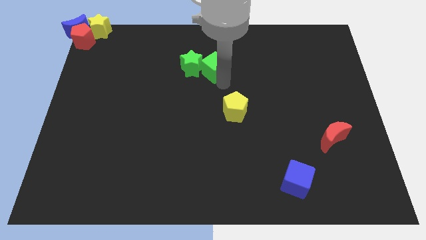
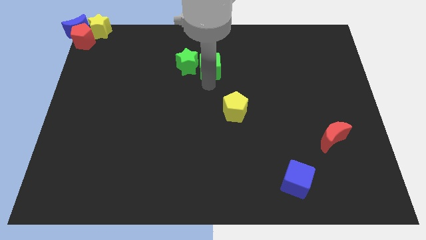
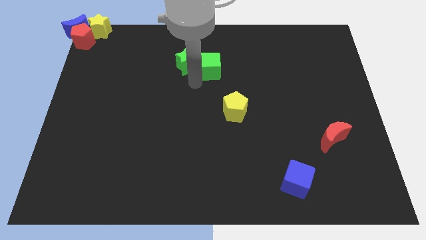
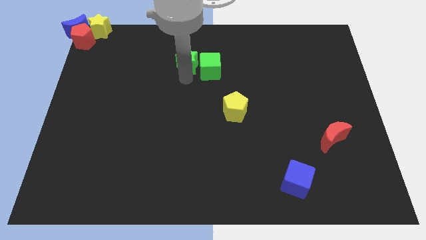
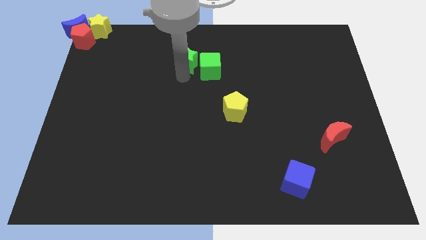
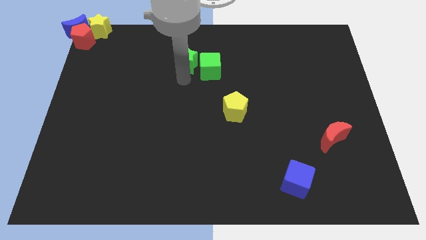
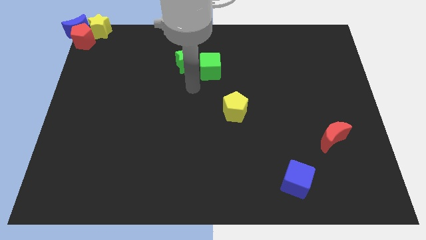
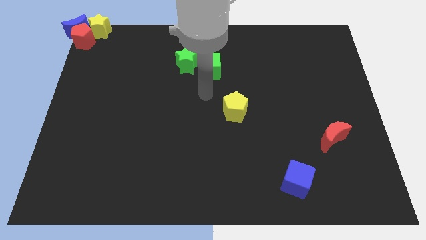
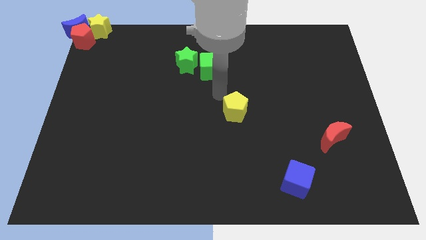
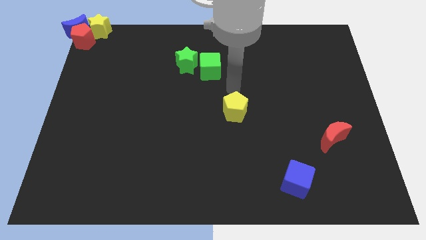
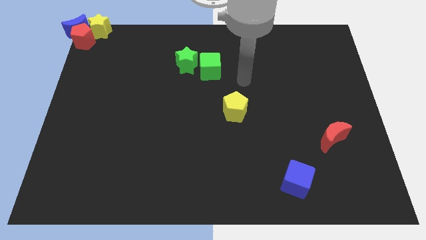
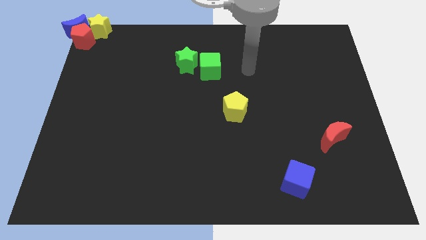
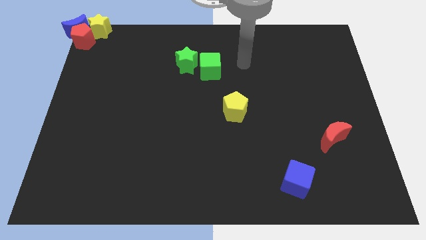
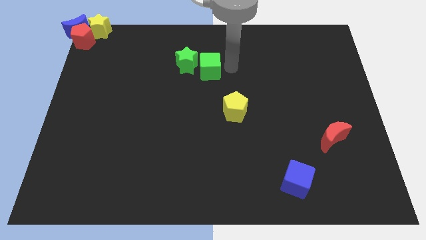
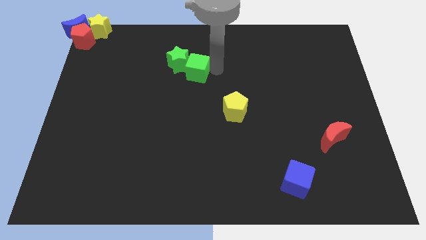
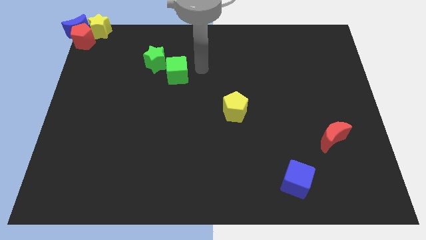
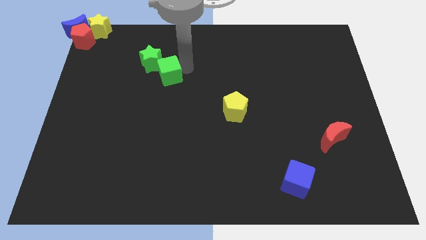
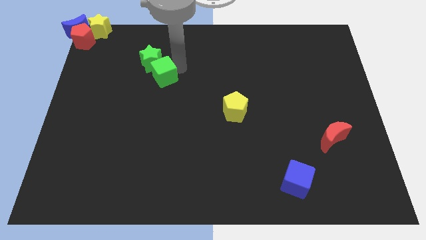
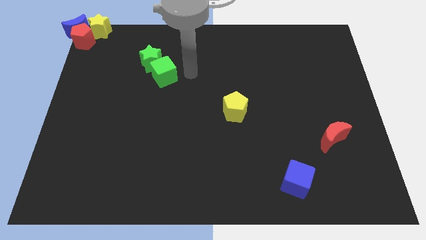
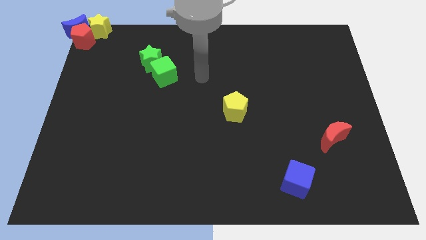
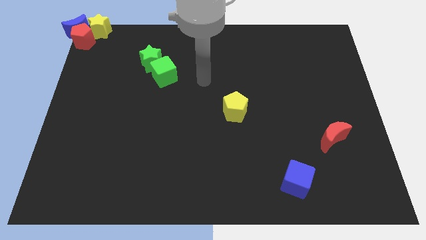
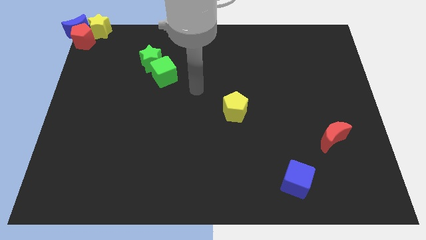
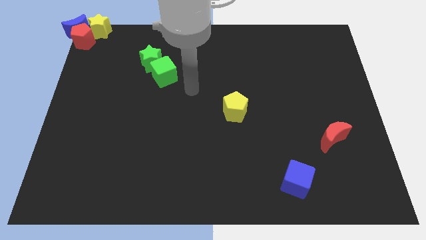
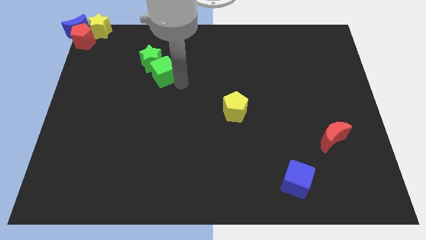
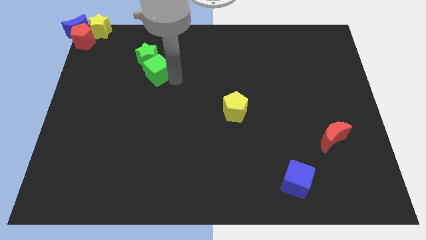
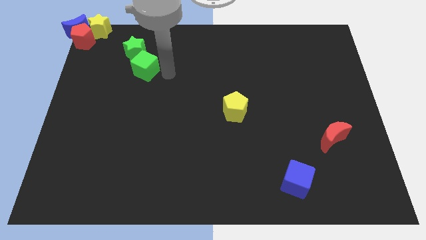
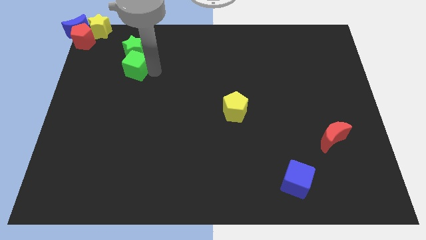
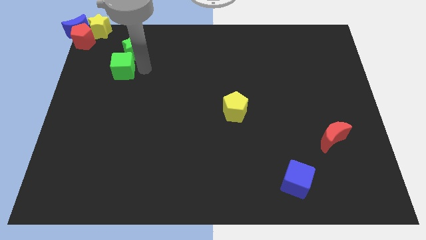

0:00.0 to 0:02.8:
push the green blocks towards the red pentagon

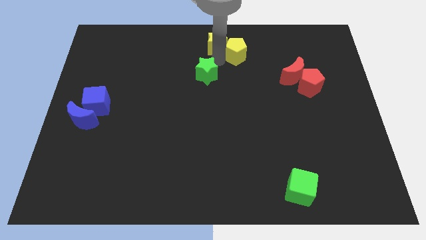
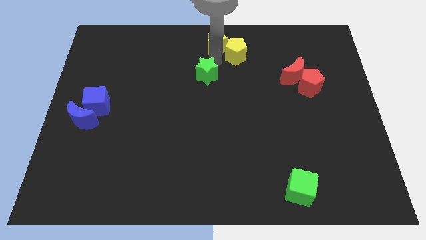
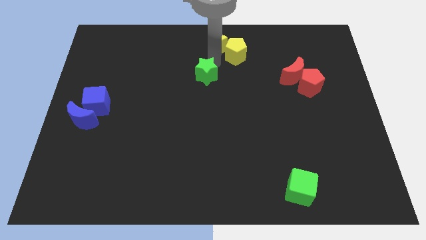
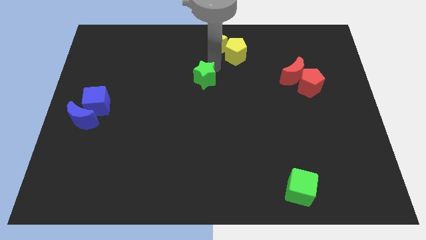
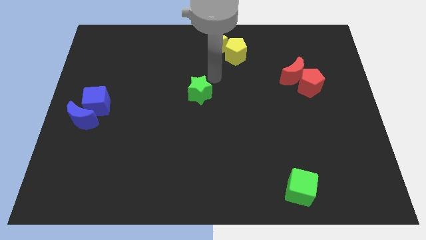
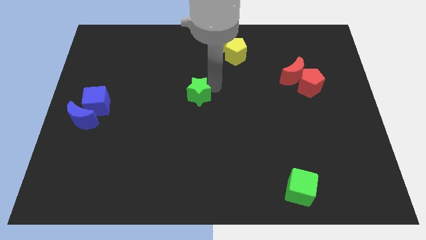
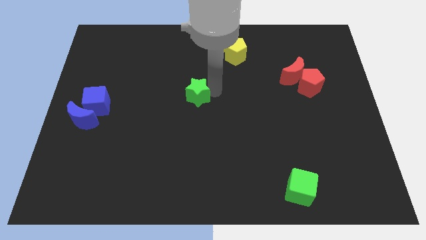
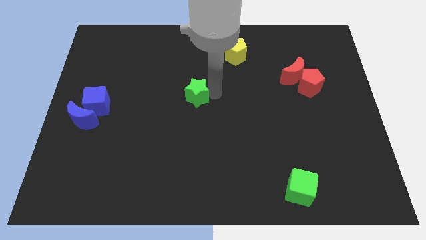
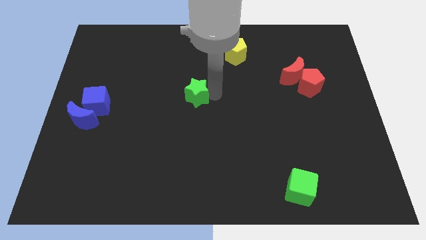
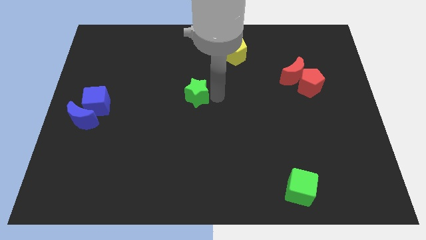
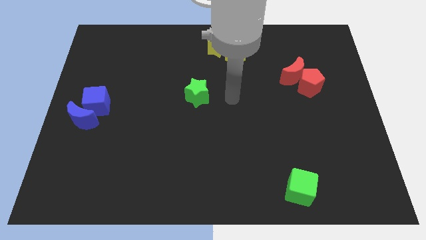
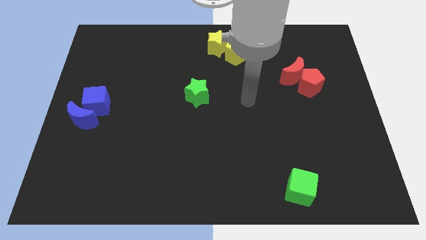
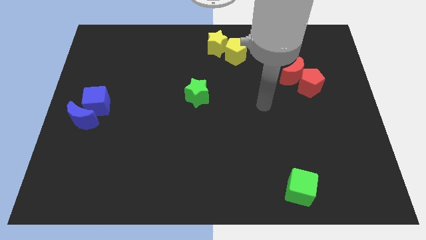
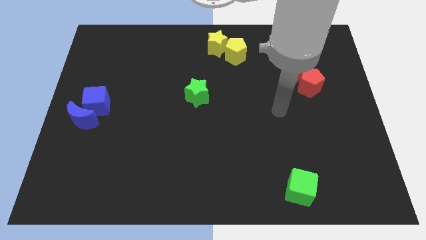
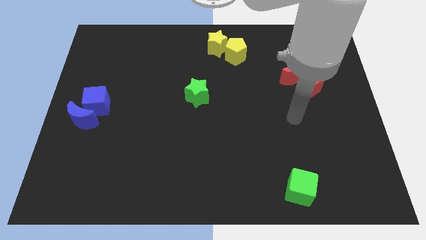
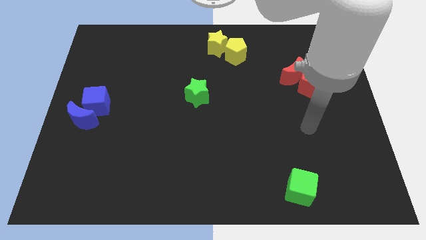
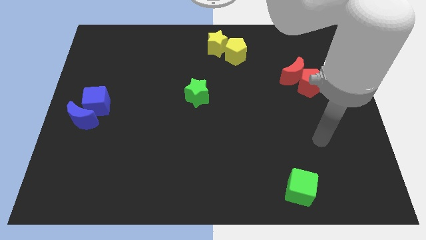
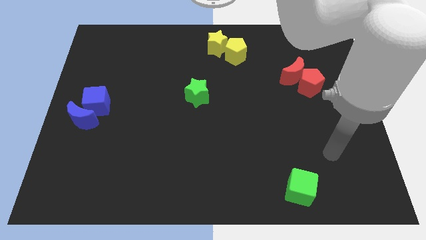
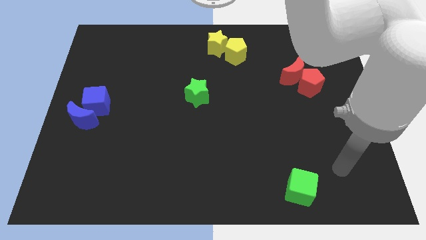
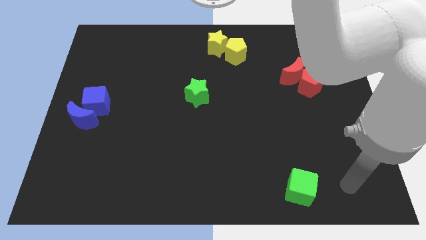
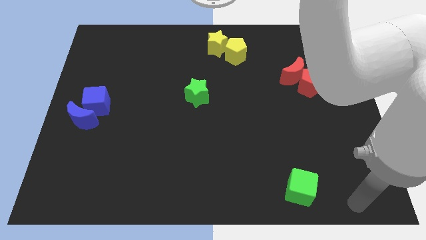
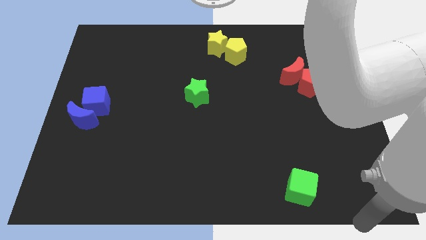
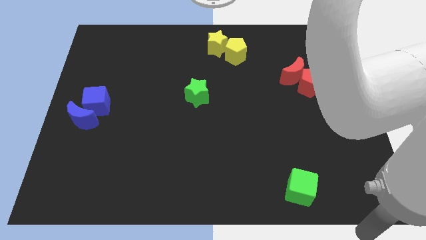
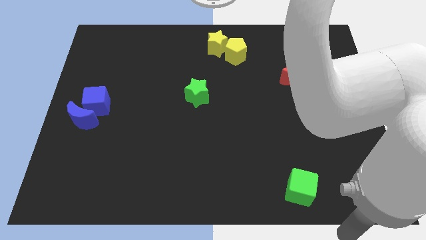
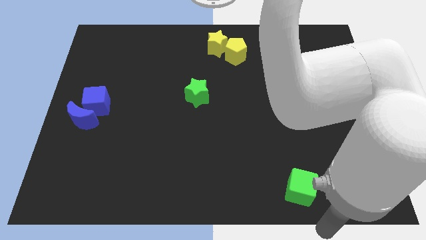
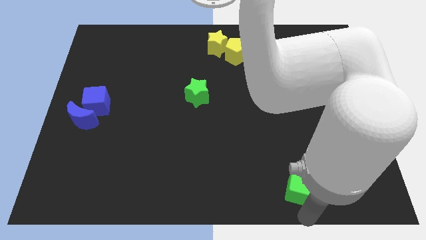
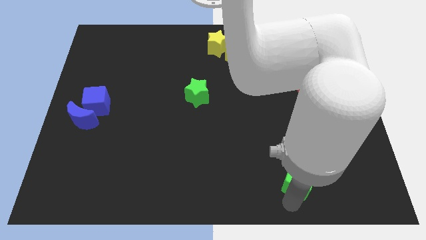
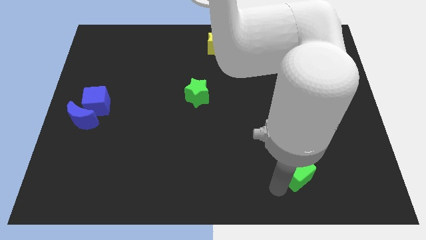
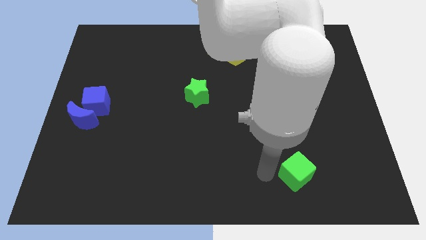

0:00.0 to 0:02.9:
move the arm to the left of the green cube

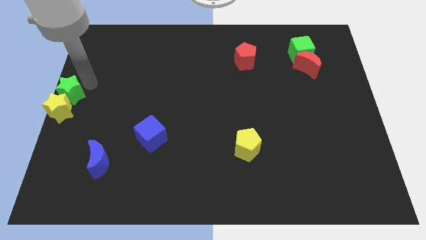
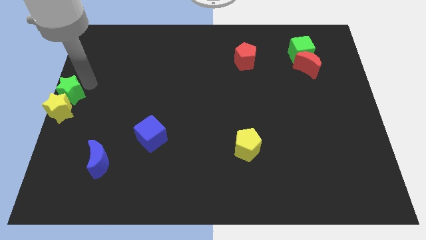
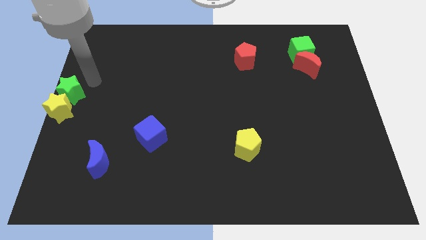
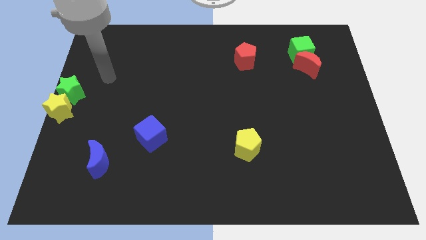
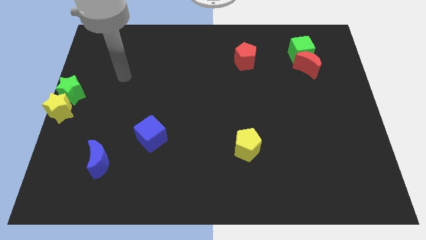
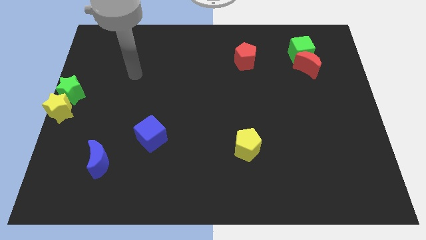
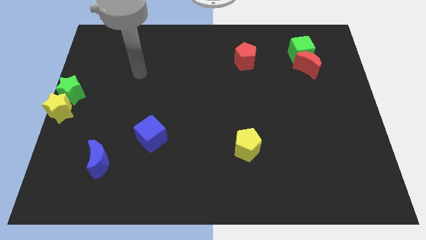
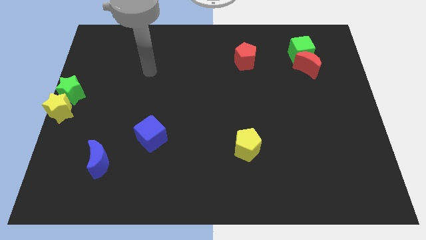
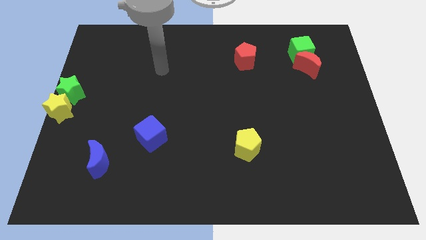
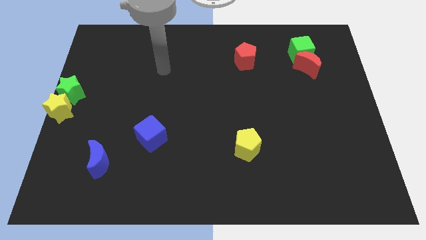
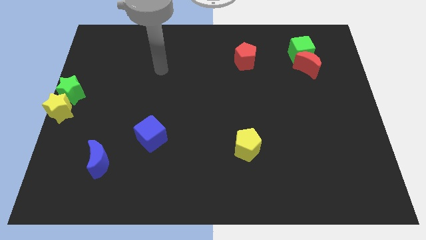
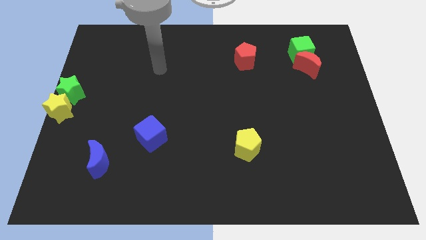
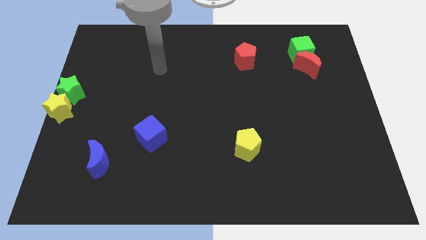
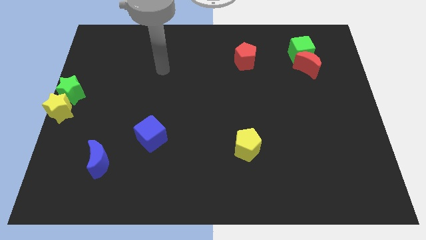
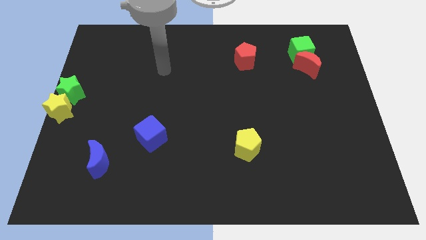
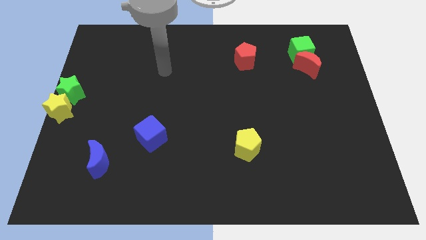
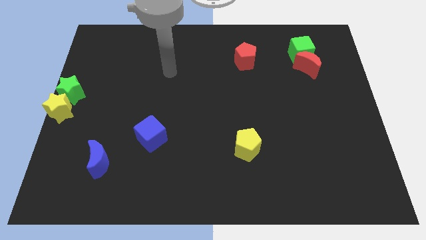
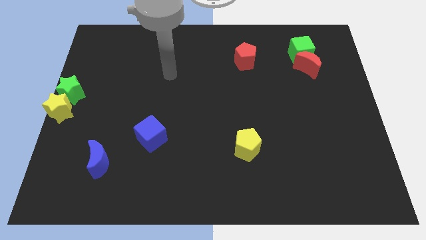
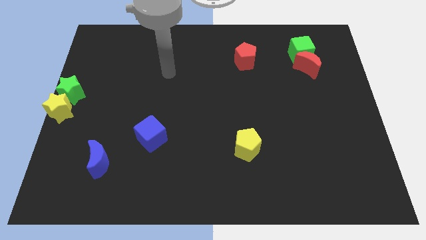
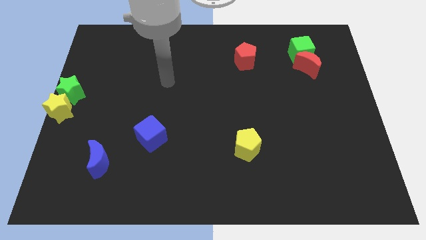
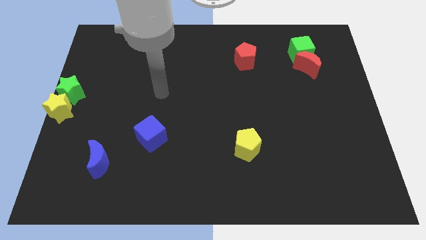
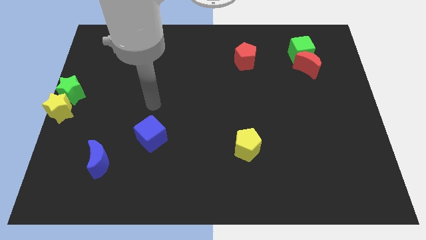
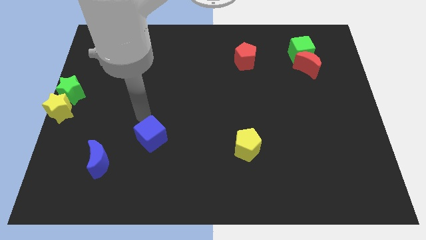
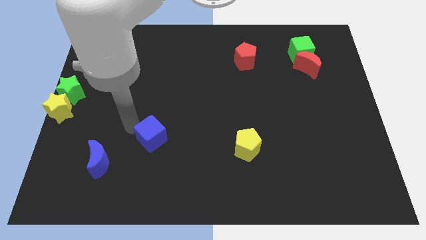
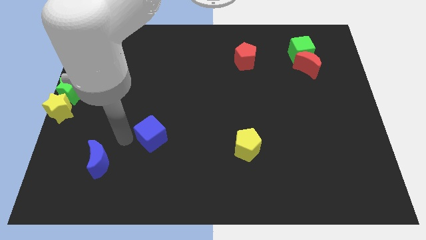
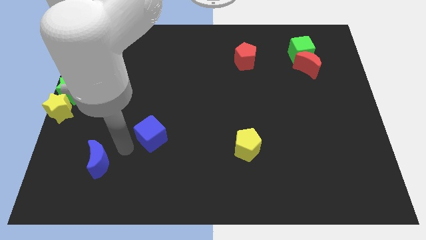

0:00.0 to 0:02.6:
move the arm to the left of the blue cube

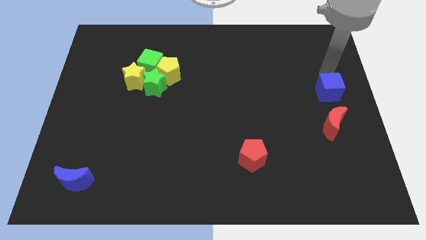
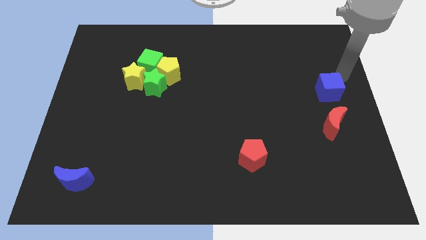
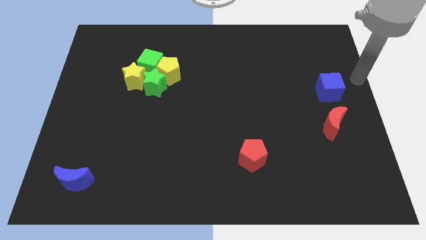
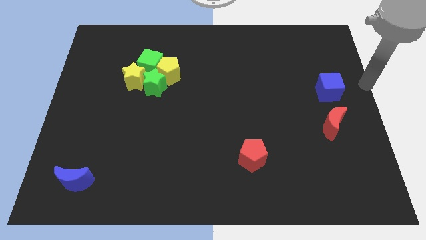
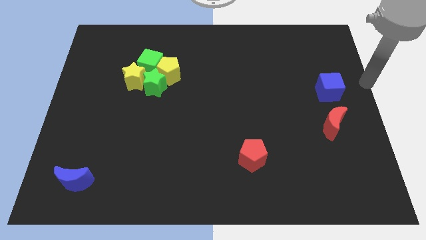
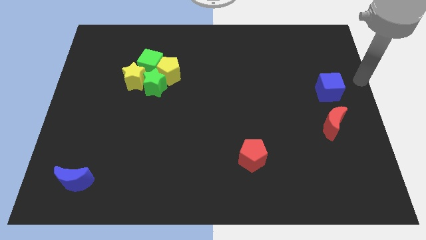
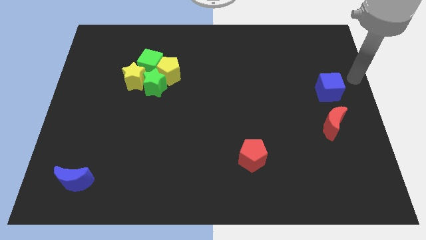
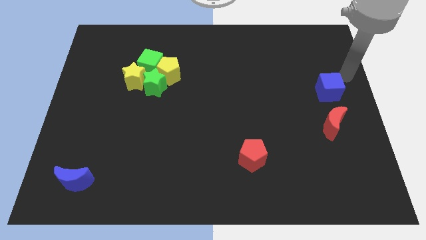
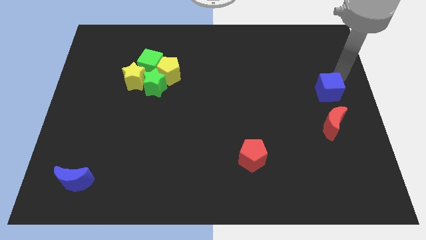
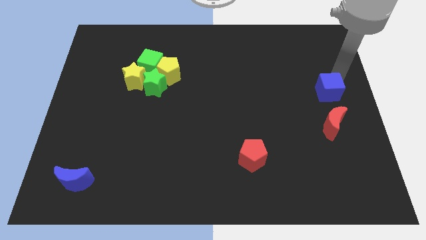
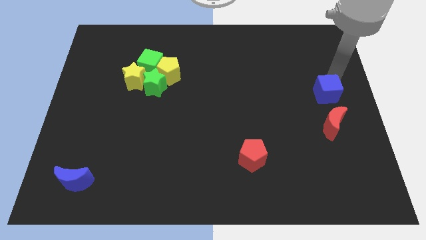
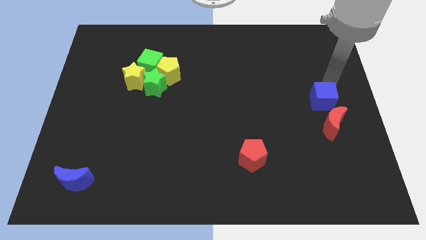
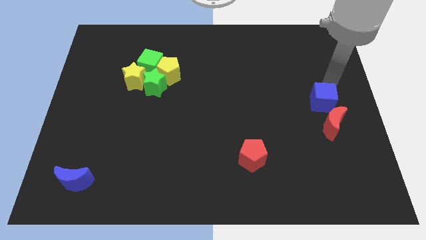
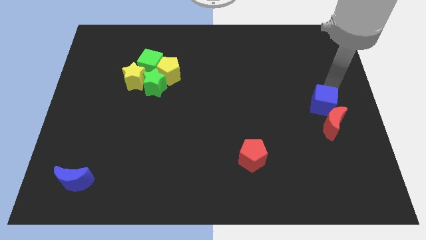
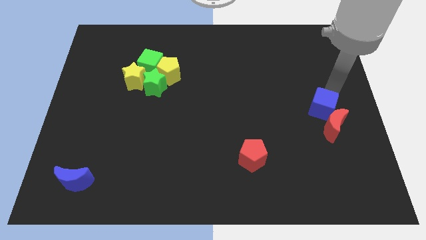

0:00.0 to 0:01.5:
push the blue cube into the red moon
